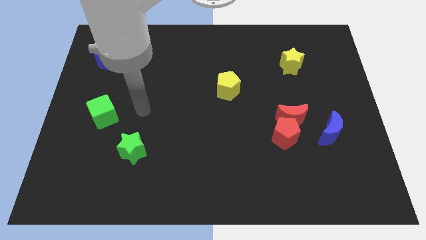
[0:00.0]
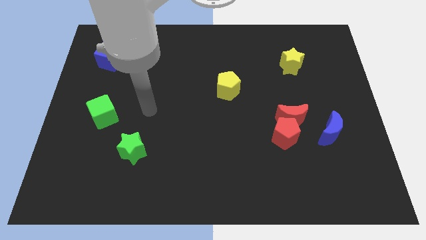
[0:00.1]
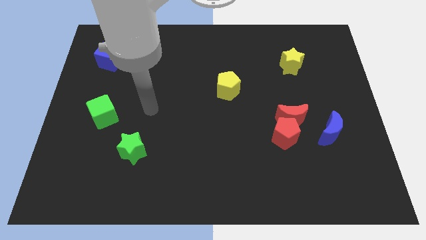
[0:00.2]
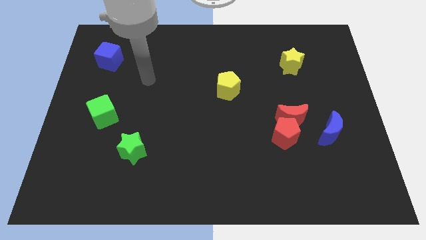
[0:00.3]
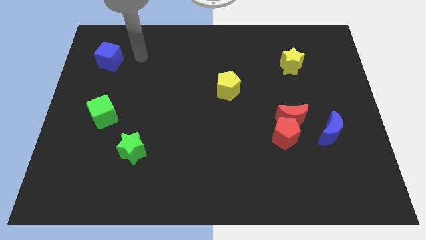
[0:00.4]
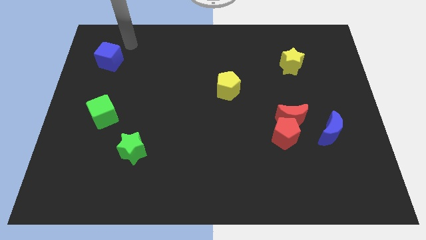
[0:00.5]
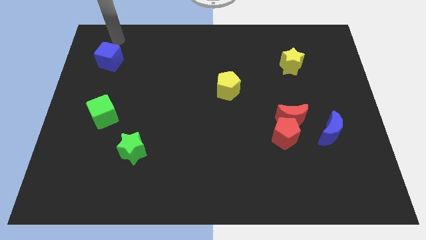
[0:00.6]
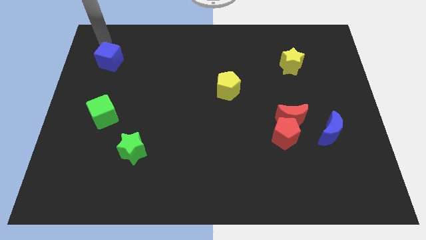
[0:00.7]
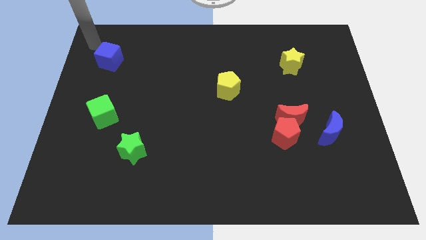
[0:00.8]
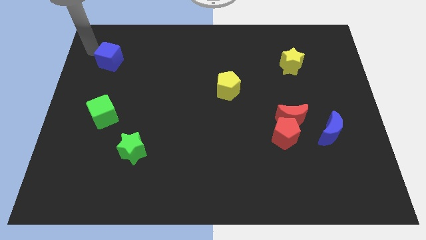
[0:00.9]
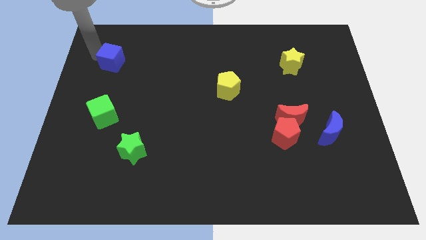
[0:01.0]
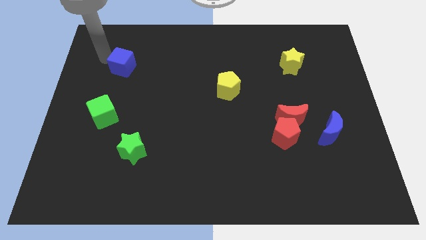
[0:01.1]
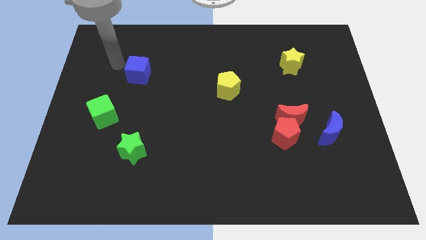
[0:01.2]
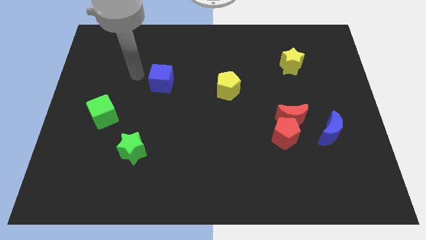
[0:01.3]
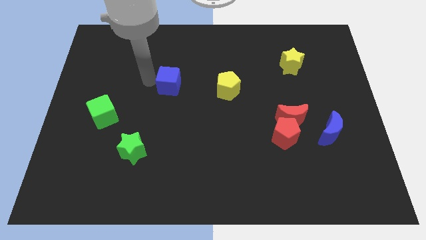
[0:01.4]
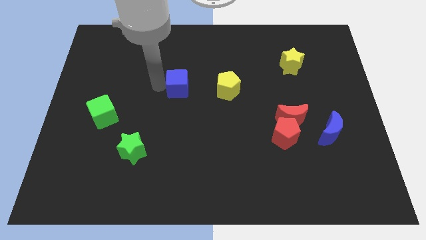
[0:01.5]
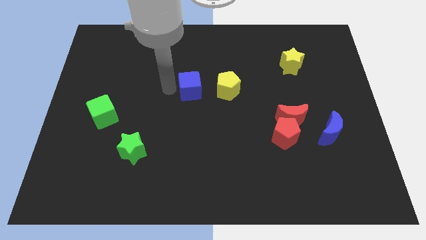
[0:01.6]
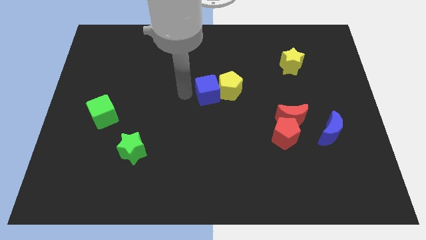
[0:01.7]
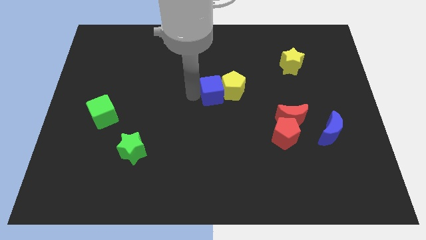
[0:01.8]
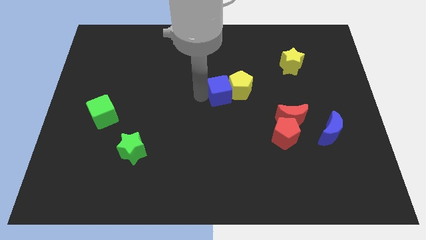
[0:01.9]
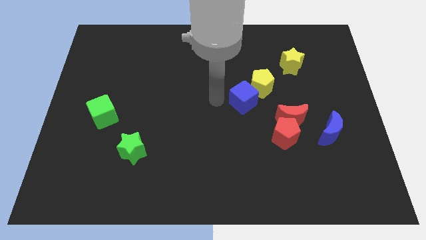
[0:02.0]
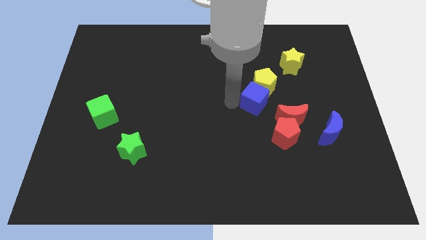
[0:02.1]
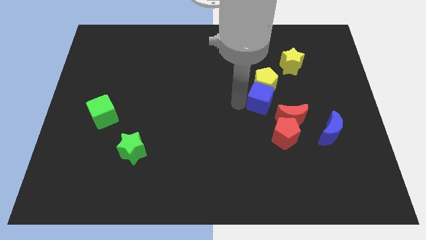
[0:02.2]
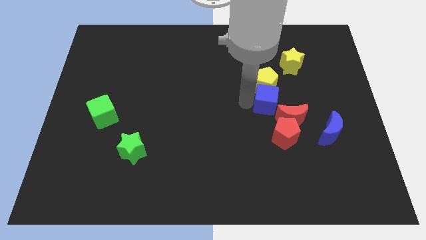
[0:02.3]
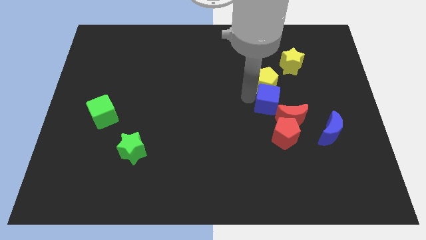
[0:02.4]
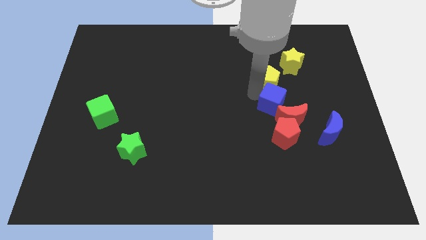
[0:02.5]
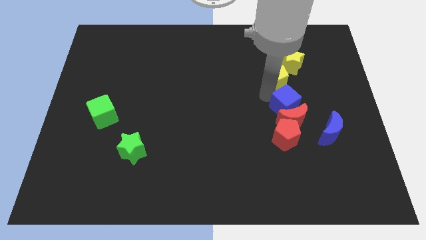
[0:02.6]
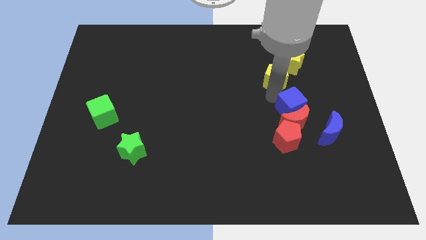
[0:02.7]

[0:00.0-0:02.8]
move the blue cube next to the red moon

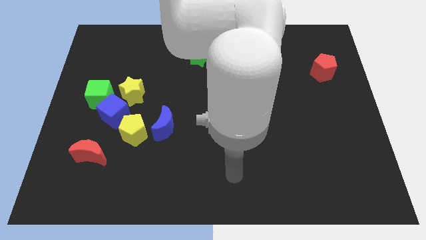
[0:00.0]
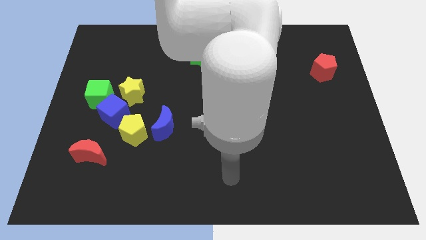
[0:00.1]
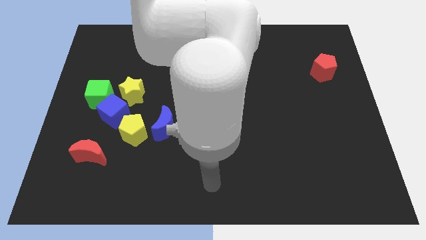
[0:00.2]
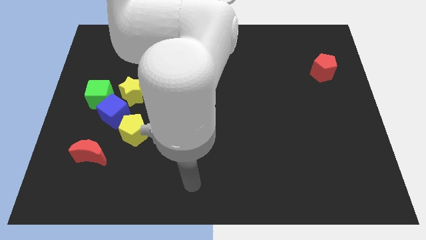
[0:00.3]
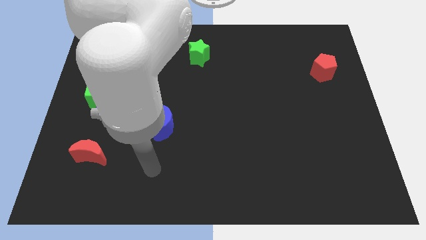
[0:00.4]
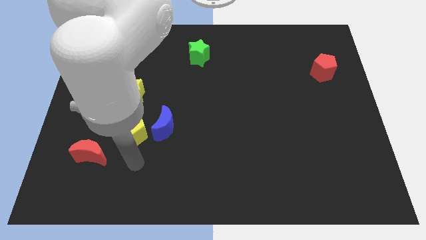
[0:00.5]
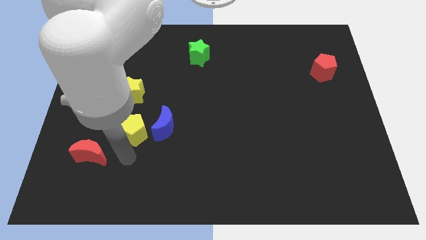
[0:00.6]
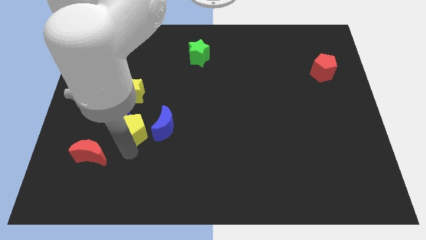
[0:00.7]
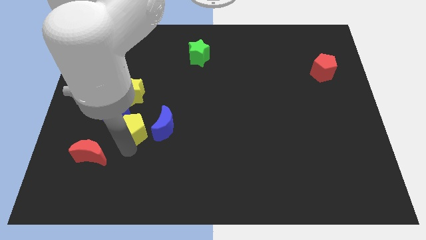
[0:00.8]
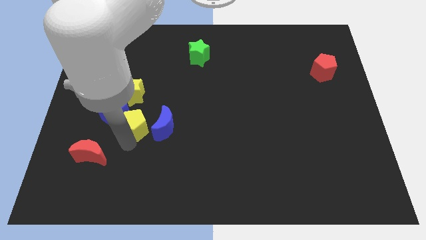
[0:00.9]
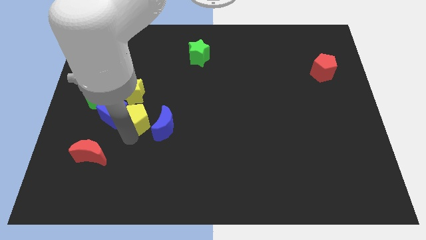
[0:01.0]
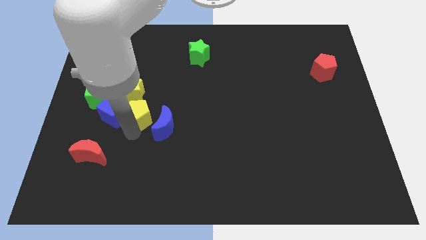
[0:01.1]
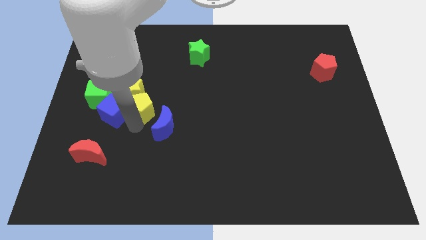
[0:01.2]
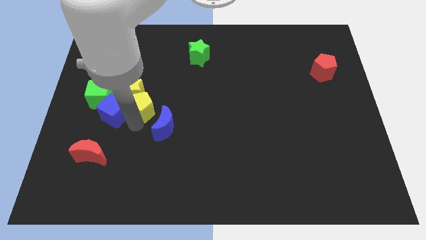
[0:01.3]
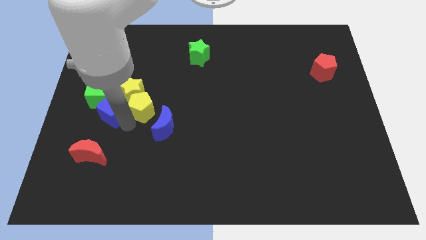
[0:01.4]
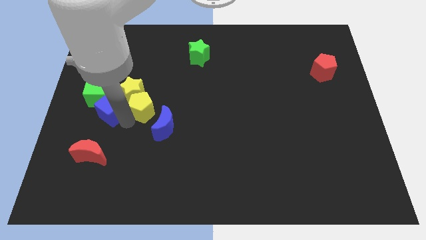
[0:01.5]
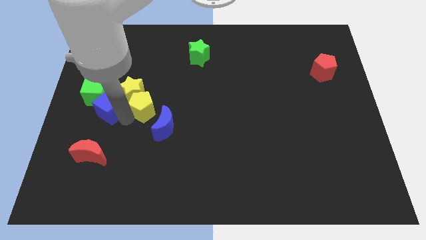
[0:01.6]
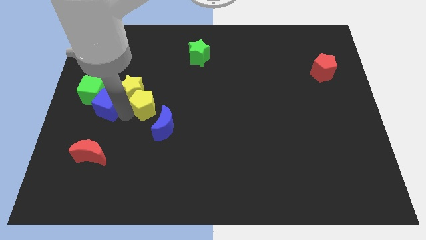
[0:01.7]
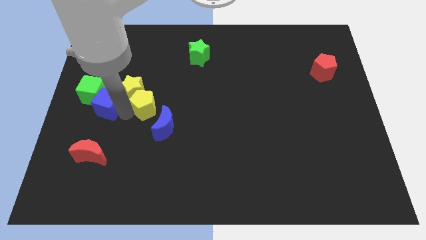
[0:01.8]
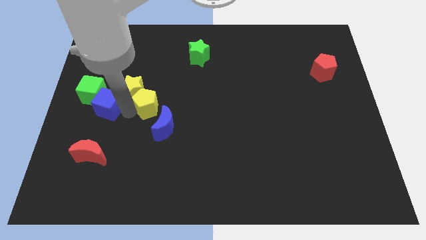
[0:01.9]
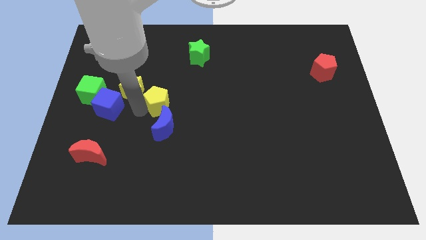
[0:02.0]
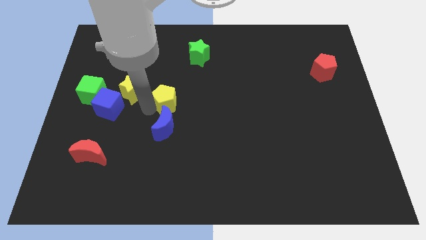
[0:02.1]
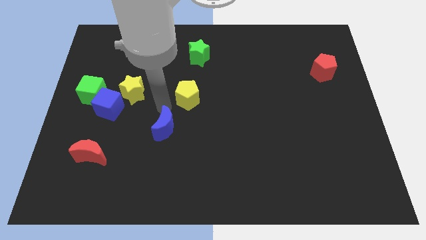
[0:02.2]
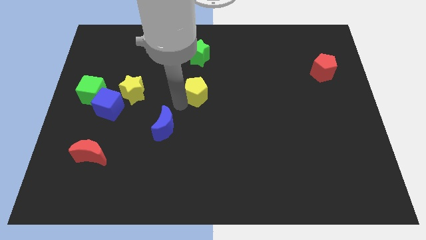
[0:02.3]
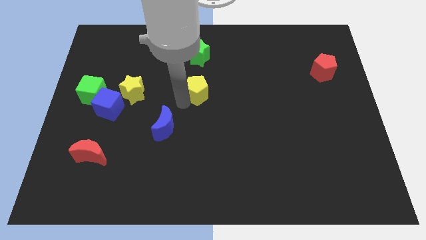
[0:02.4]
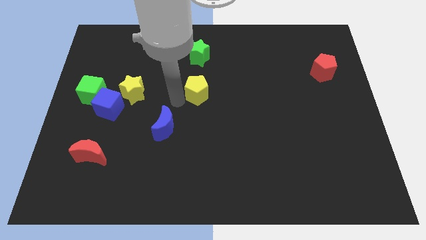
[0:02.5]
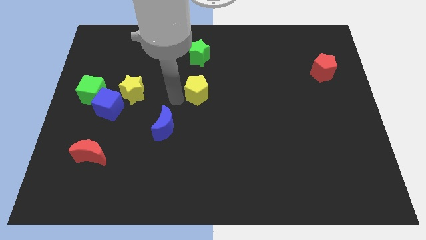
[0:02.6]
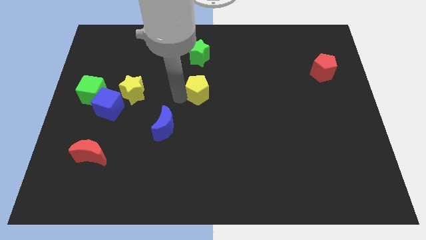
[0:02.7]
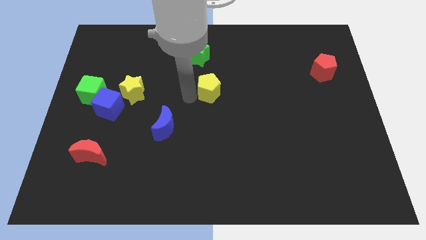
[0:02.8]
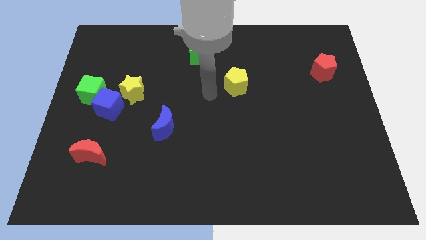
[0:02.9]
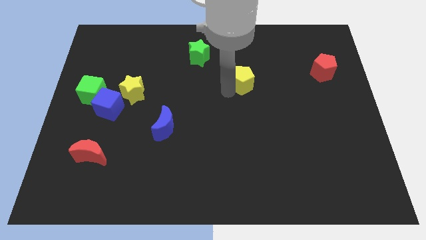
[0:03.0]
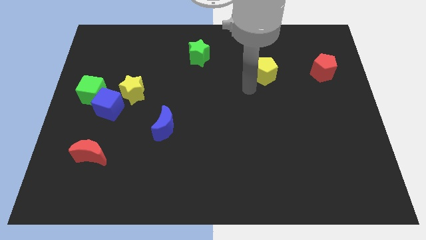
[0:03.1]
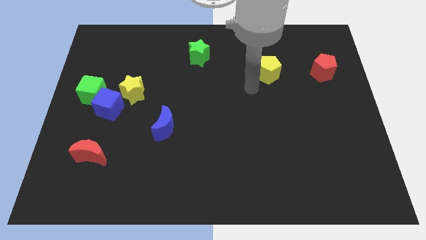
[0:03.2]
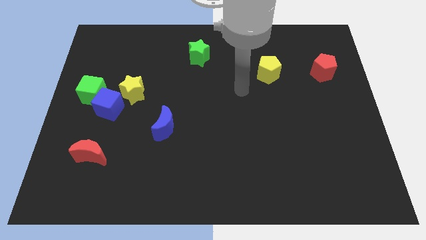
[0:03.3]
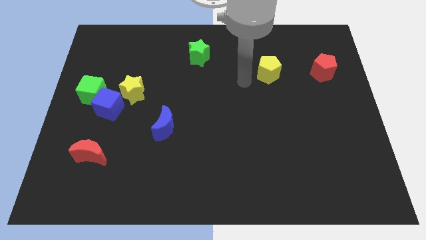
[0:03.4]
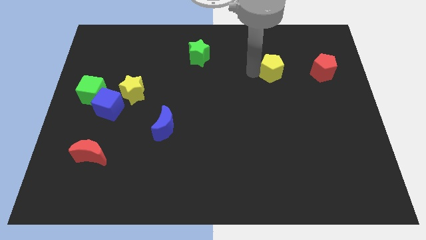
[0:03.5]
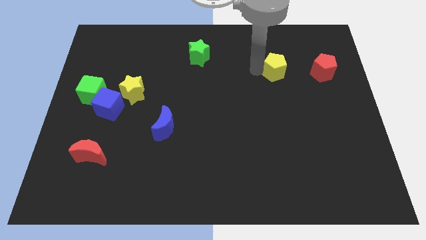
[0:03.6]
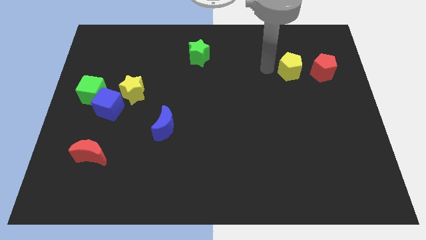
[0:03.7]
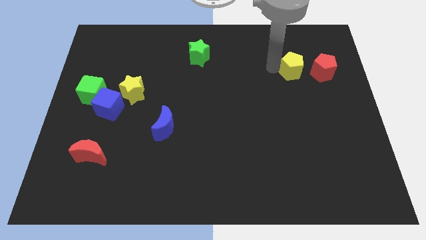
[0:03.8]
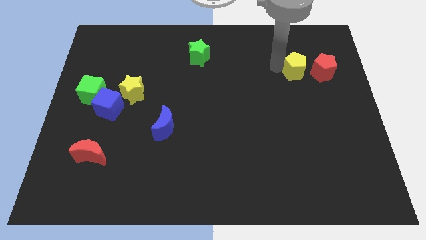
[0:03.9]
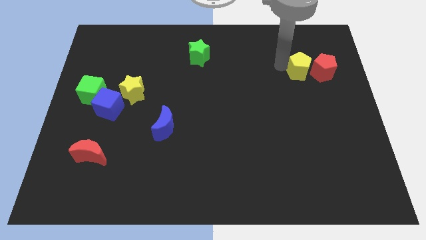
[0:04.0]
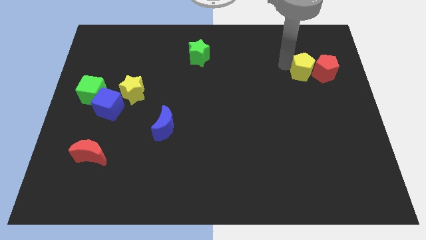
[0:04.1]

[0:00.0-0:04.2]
put the yellow pentagon close to the red pentagon

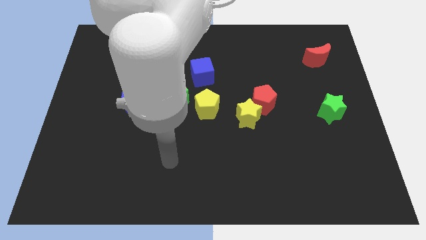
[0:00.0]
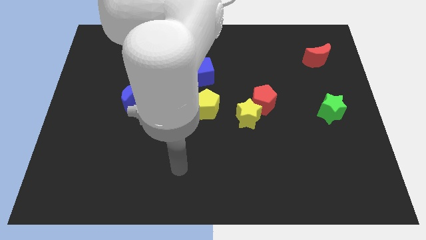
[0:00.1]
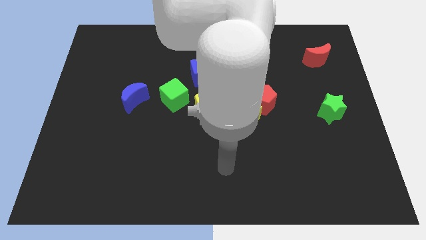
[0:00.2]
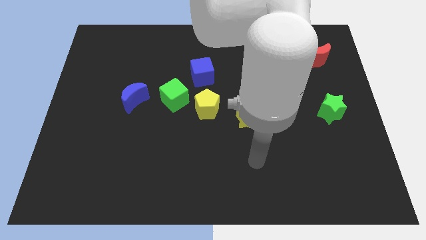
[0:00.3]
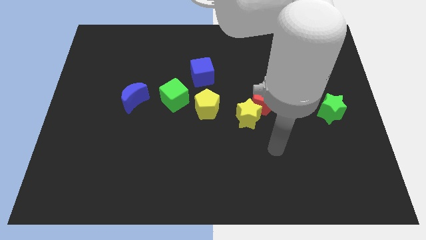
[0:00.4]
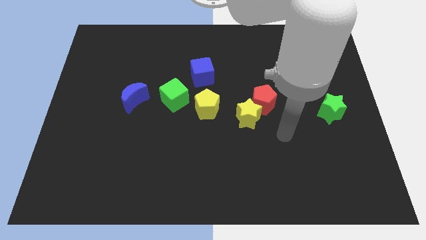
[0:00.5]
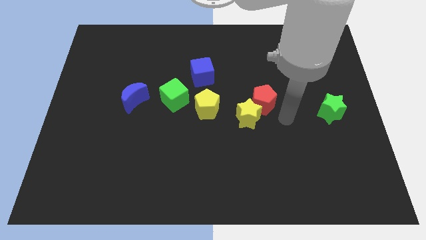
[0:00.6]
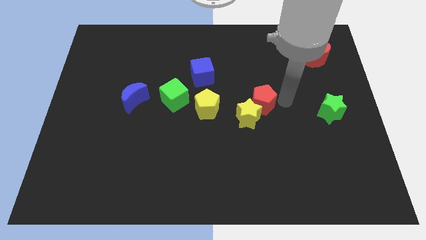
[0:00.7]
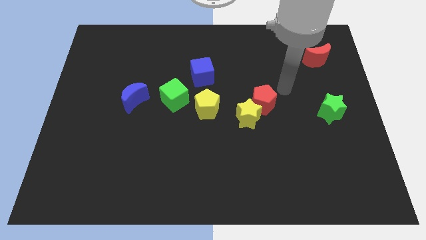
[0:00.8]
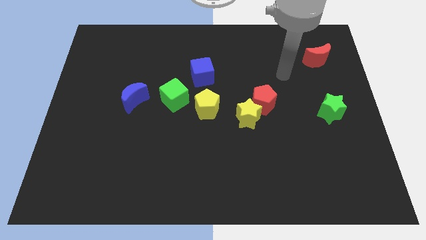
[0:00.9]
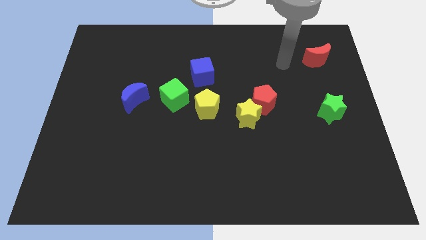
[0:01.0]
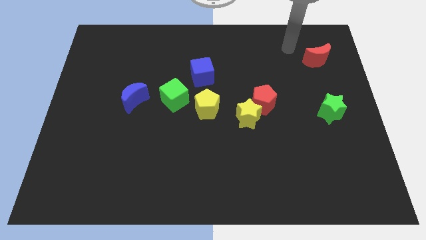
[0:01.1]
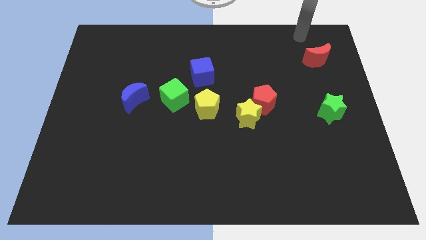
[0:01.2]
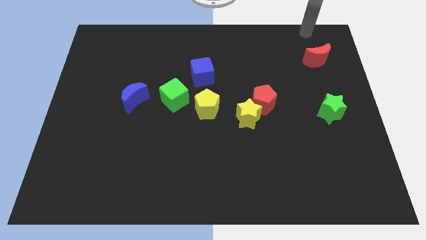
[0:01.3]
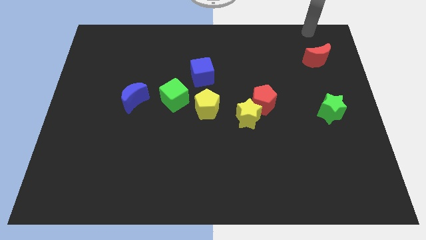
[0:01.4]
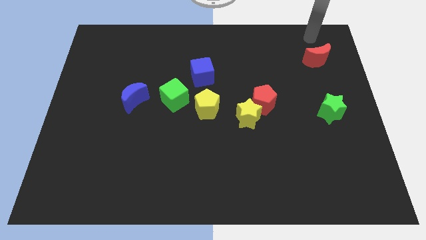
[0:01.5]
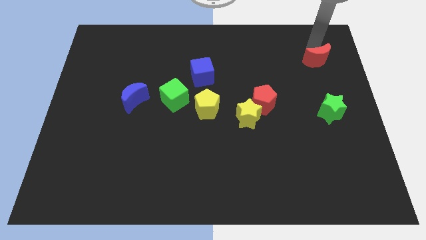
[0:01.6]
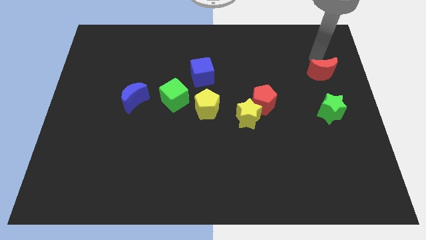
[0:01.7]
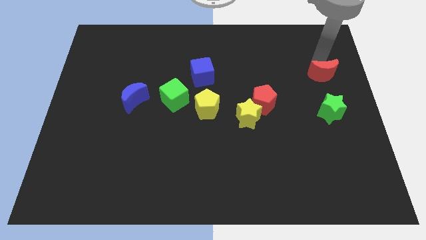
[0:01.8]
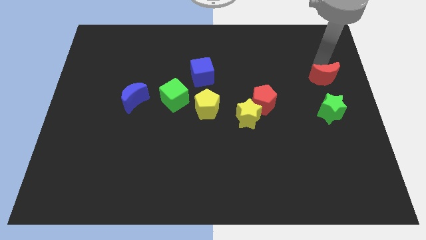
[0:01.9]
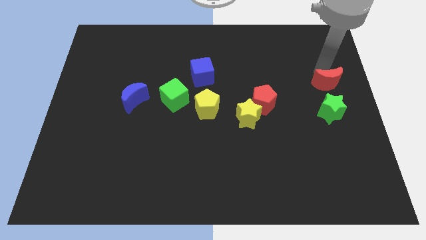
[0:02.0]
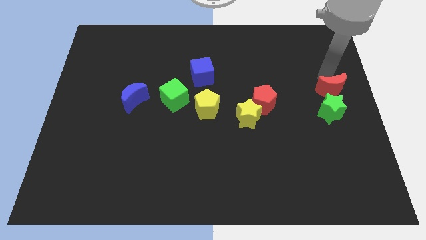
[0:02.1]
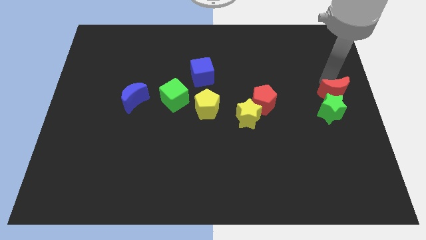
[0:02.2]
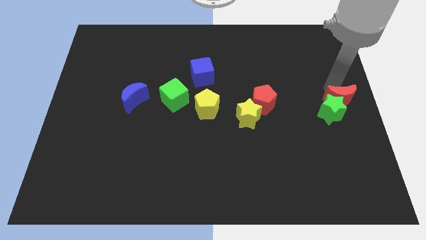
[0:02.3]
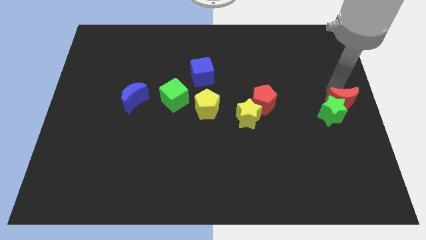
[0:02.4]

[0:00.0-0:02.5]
put the red moon towards the green star
